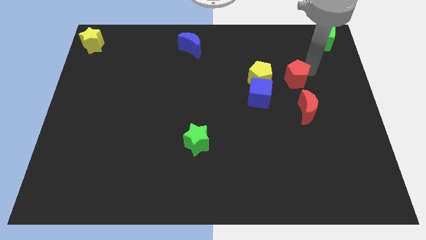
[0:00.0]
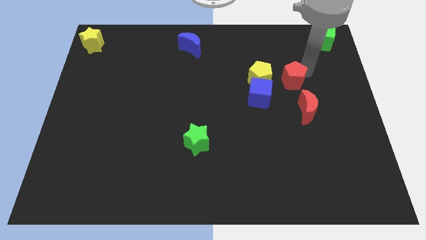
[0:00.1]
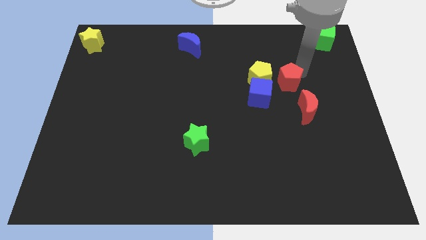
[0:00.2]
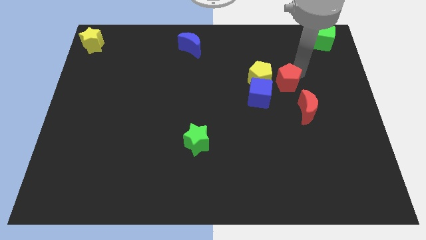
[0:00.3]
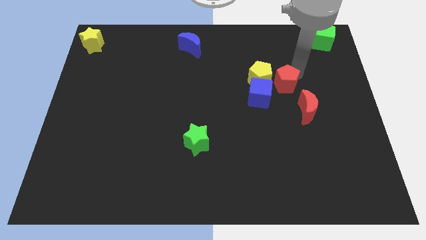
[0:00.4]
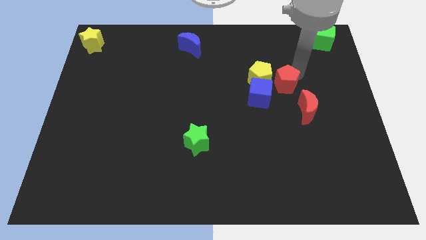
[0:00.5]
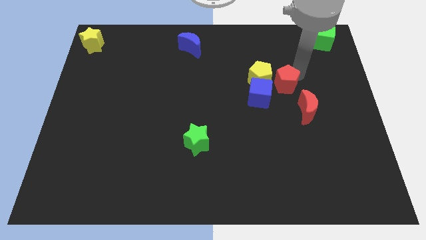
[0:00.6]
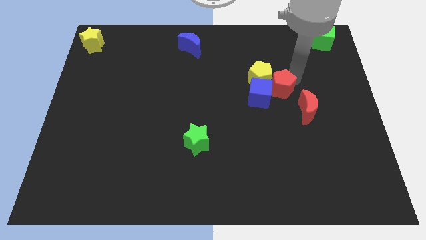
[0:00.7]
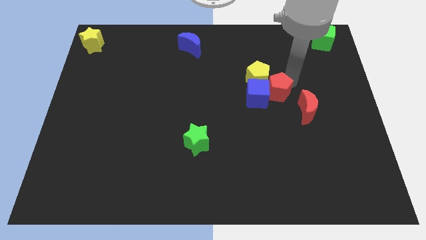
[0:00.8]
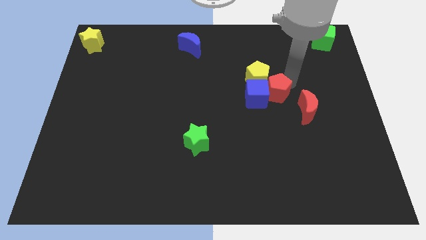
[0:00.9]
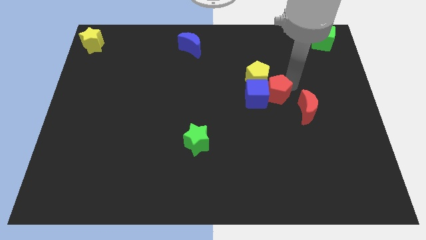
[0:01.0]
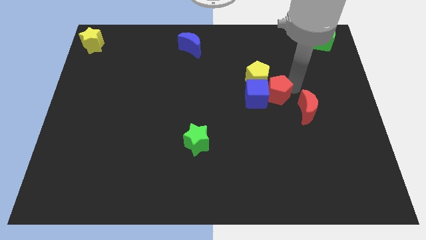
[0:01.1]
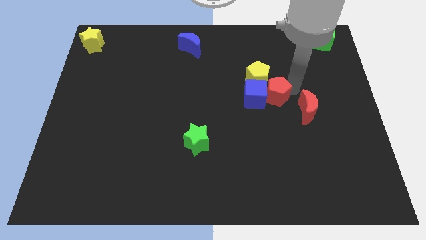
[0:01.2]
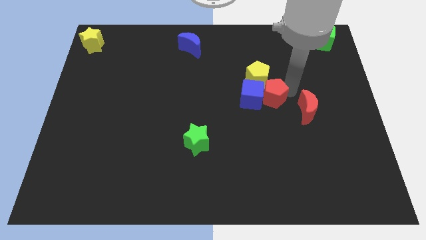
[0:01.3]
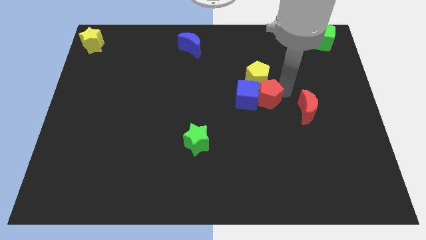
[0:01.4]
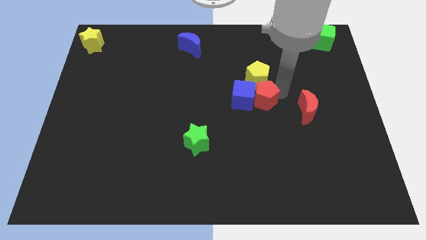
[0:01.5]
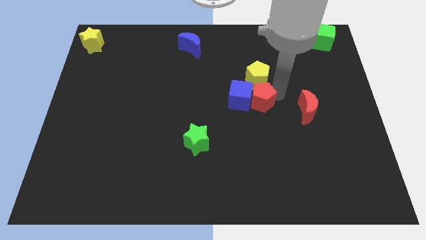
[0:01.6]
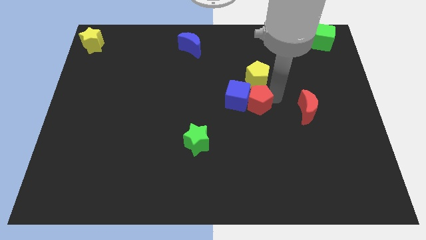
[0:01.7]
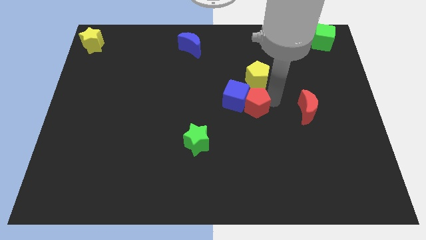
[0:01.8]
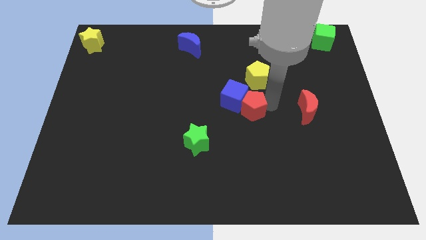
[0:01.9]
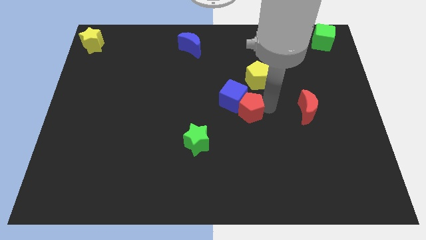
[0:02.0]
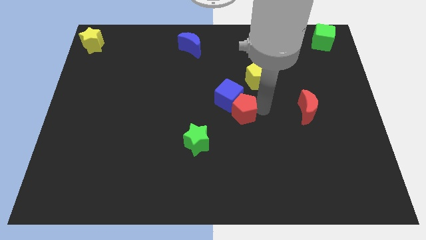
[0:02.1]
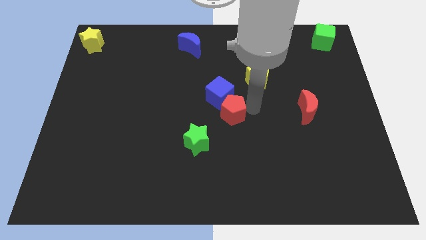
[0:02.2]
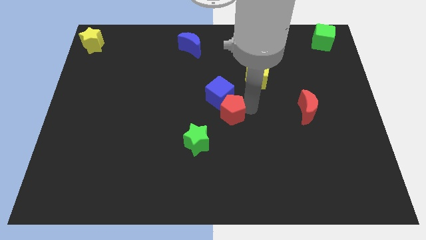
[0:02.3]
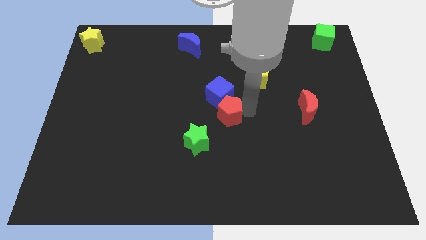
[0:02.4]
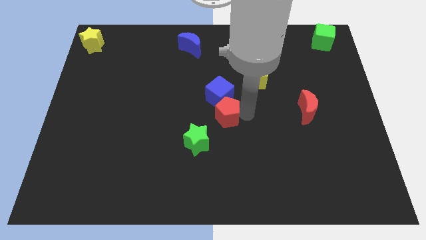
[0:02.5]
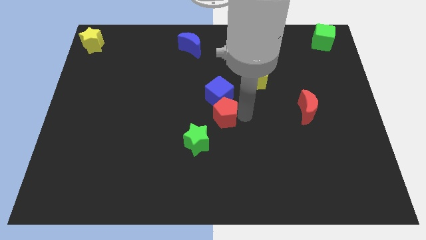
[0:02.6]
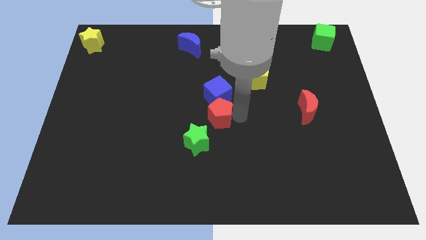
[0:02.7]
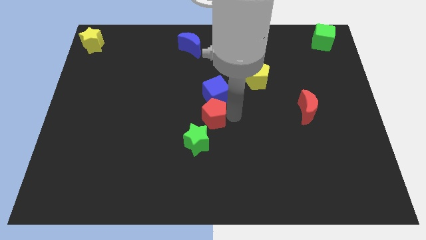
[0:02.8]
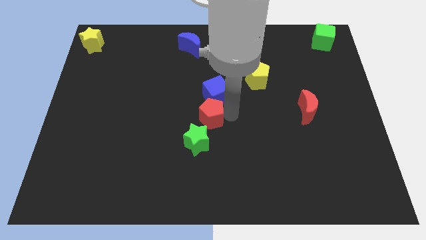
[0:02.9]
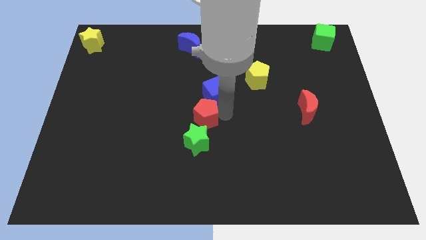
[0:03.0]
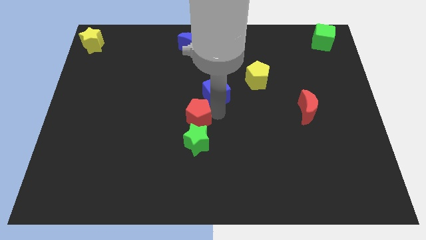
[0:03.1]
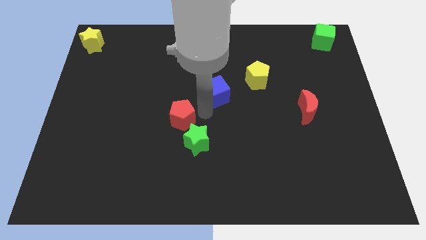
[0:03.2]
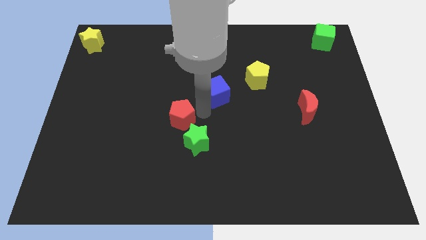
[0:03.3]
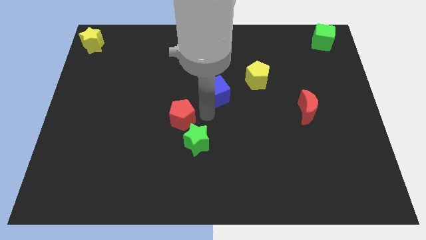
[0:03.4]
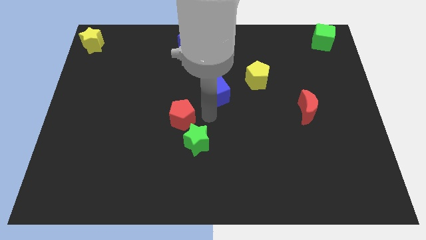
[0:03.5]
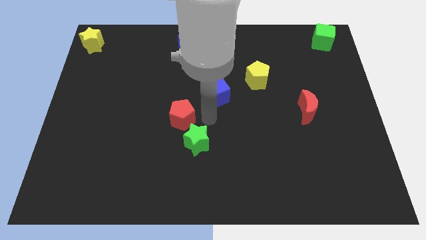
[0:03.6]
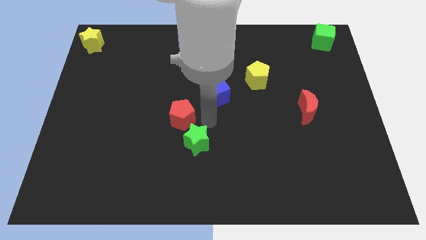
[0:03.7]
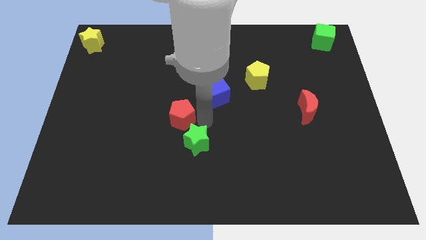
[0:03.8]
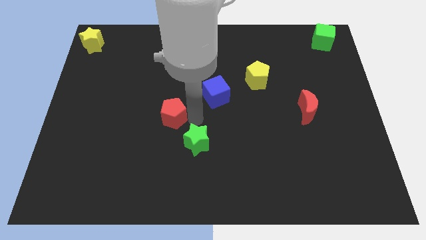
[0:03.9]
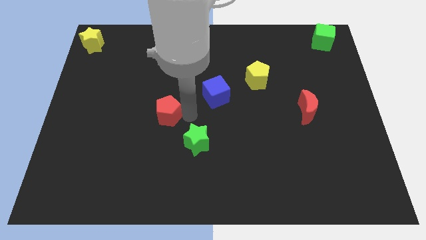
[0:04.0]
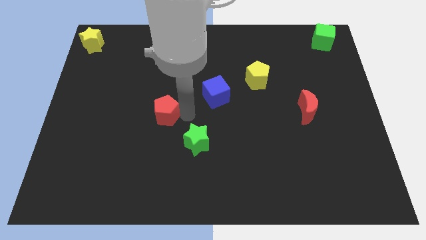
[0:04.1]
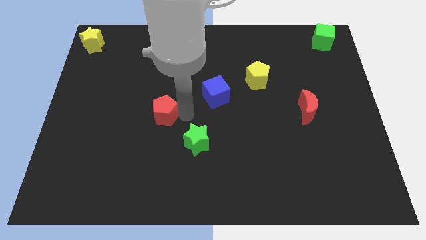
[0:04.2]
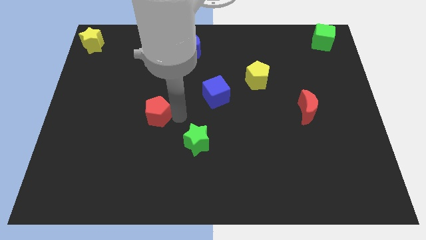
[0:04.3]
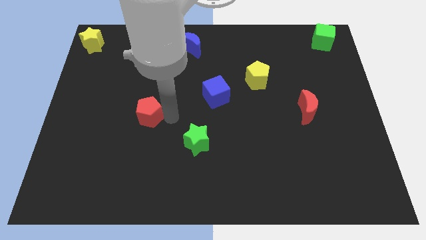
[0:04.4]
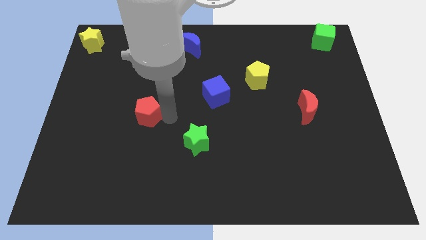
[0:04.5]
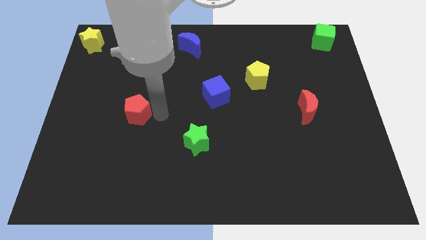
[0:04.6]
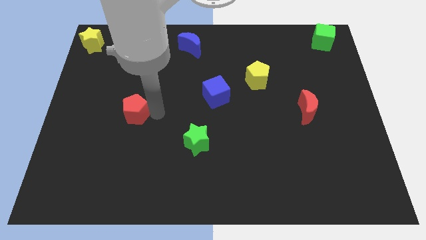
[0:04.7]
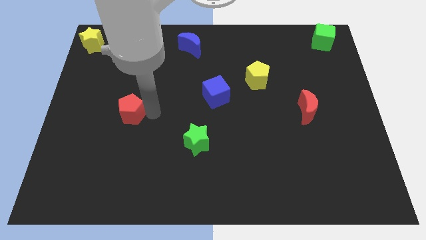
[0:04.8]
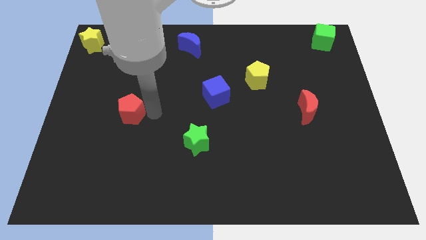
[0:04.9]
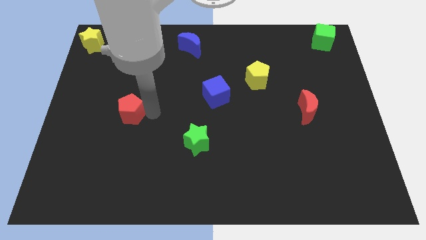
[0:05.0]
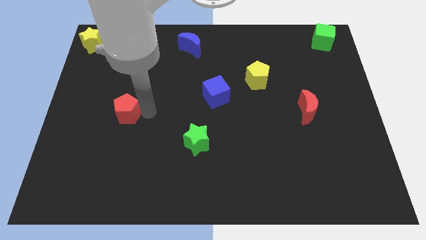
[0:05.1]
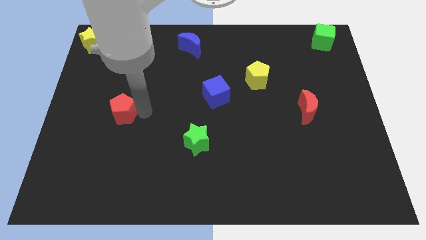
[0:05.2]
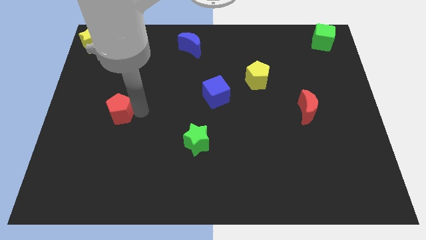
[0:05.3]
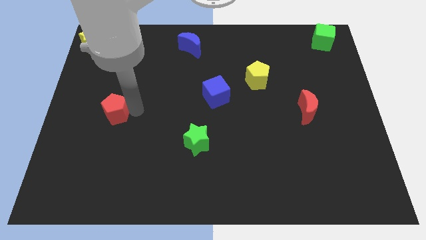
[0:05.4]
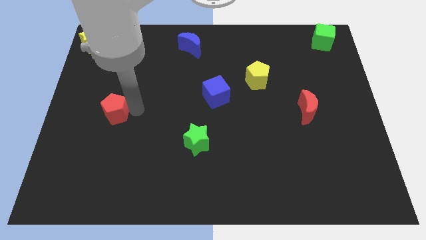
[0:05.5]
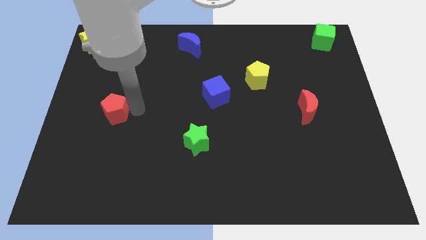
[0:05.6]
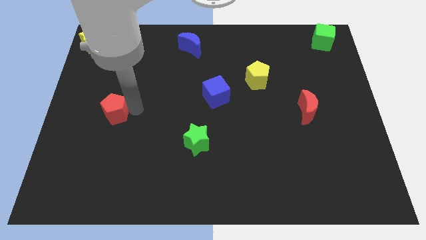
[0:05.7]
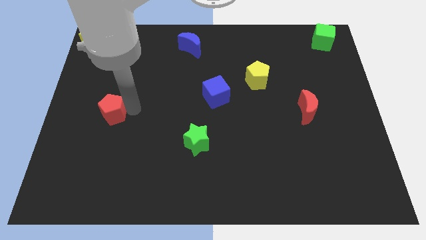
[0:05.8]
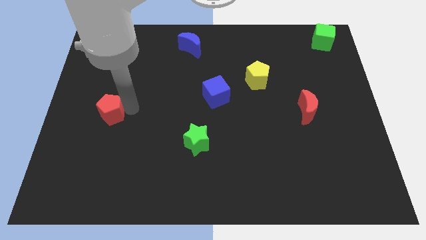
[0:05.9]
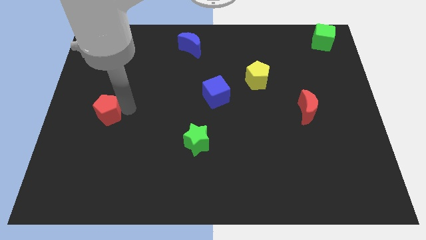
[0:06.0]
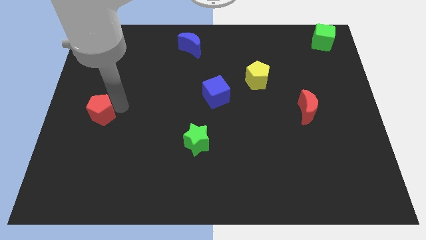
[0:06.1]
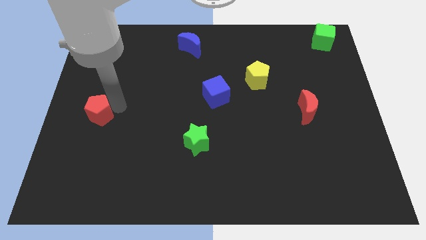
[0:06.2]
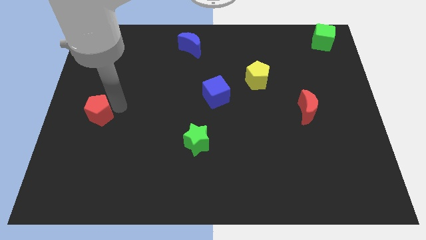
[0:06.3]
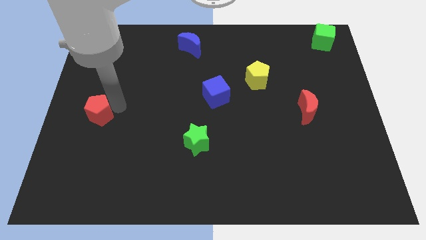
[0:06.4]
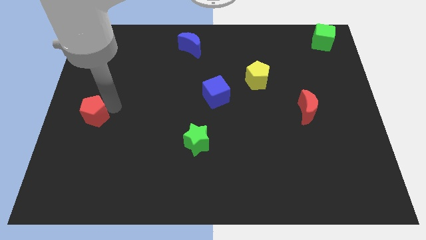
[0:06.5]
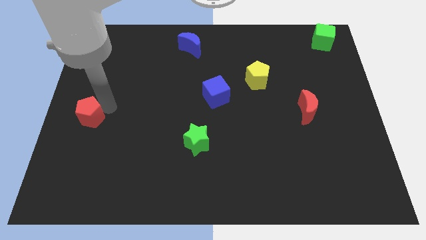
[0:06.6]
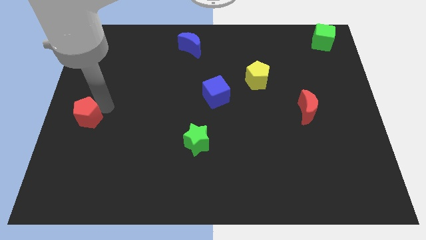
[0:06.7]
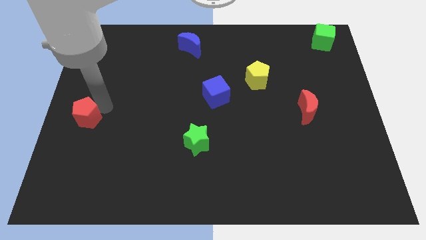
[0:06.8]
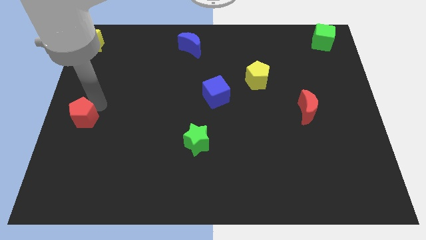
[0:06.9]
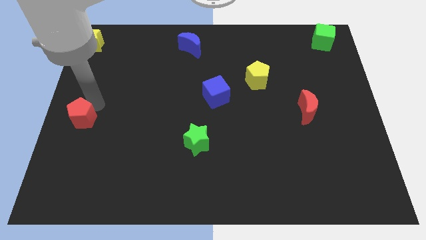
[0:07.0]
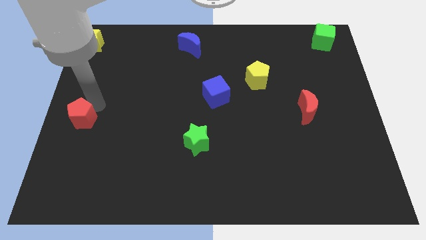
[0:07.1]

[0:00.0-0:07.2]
push the red pentagon to the left center of the board

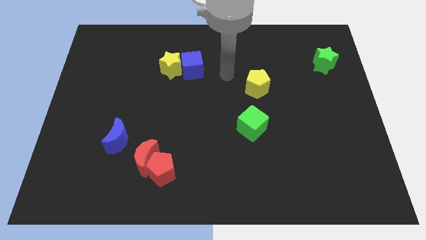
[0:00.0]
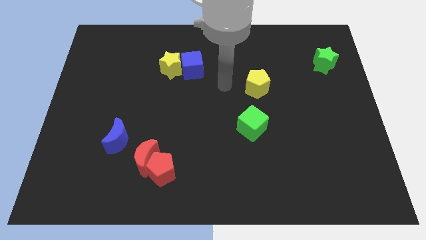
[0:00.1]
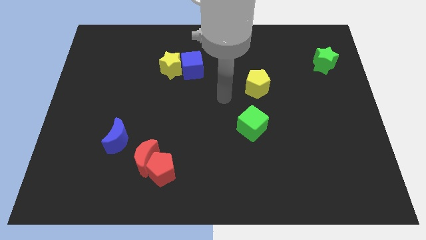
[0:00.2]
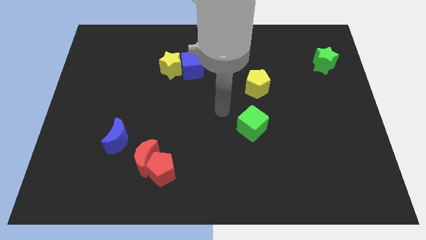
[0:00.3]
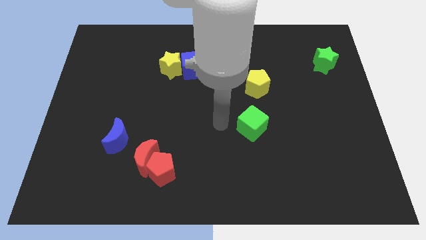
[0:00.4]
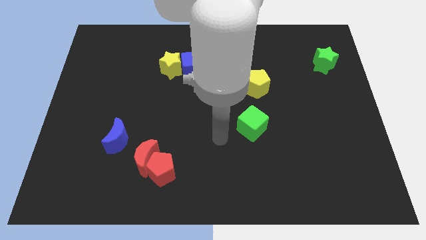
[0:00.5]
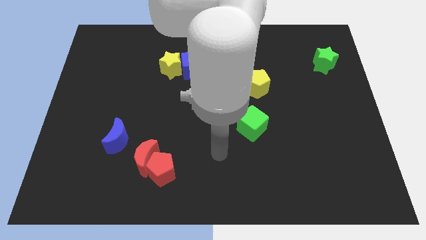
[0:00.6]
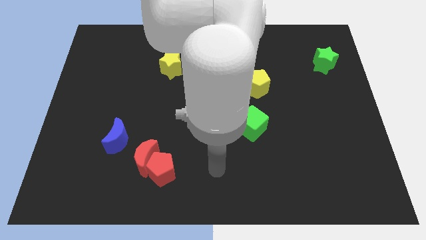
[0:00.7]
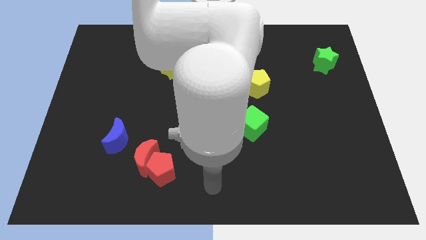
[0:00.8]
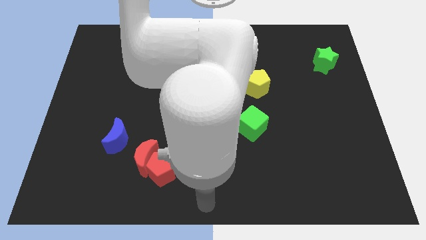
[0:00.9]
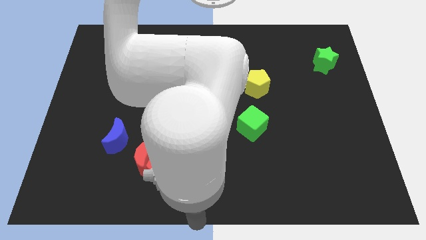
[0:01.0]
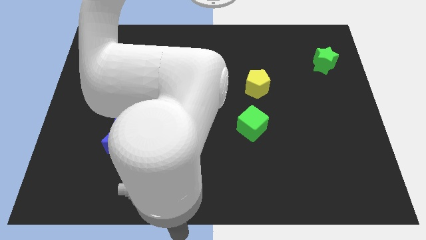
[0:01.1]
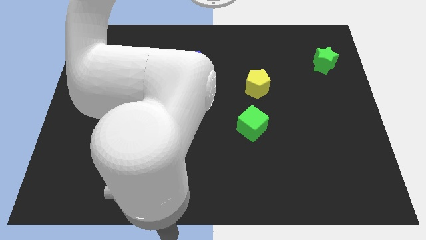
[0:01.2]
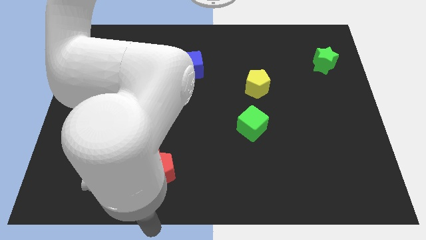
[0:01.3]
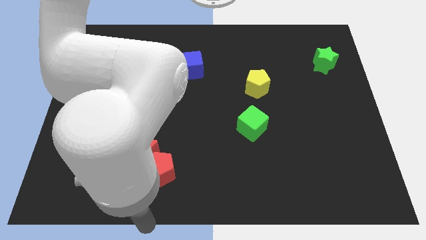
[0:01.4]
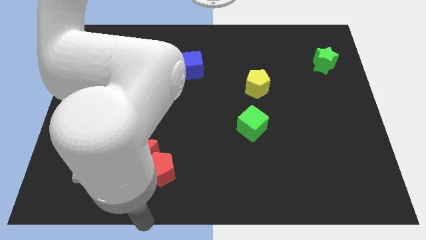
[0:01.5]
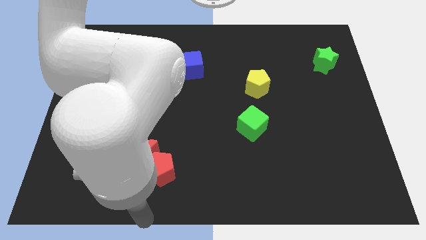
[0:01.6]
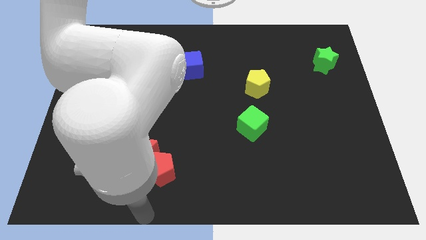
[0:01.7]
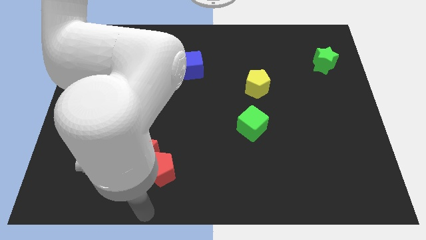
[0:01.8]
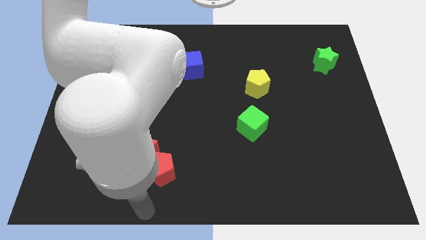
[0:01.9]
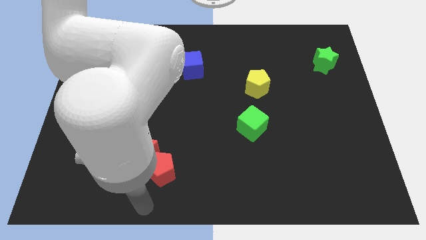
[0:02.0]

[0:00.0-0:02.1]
move your arm towards the red pentagon
